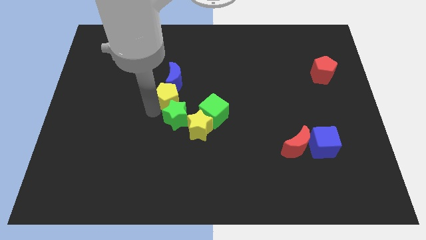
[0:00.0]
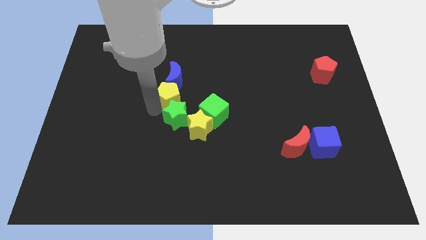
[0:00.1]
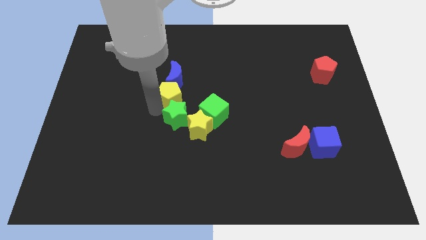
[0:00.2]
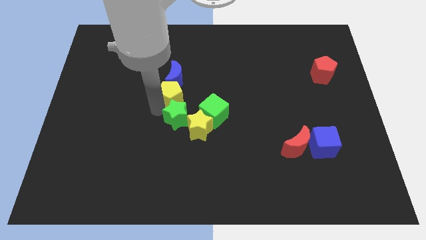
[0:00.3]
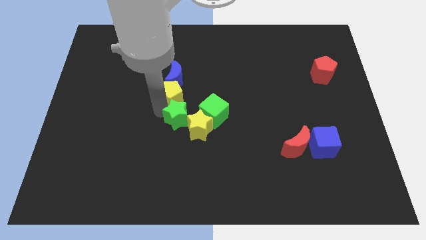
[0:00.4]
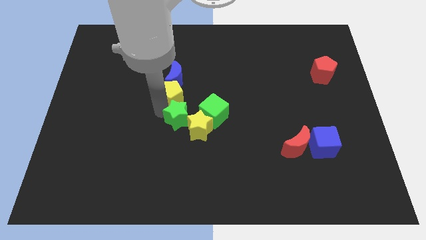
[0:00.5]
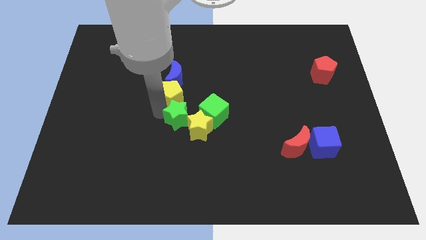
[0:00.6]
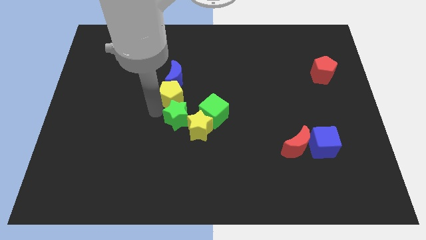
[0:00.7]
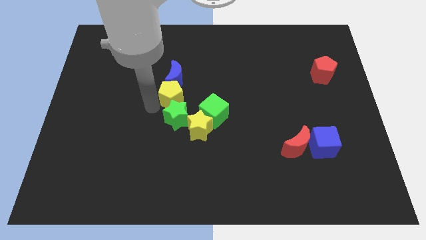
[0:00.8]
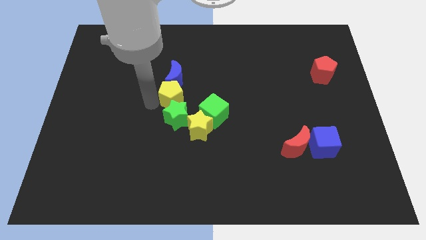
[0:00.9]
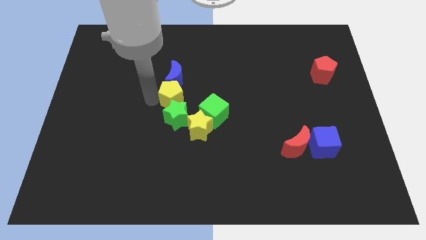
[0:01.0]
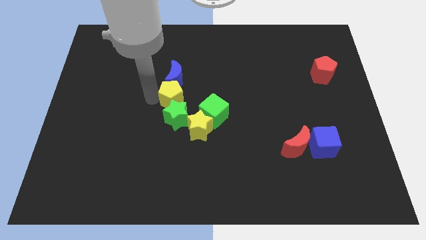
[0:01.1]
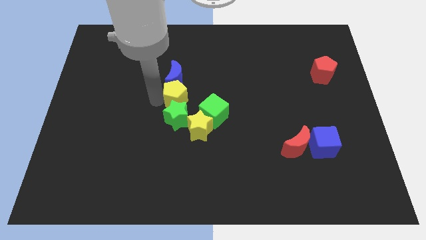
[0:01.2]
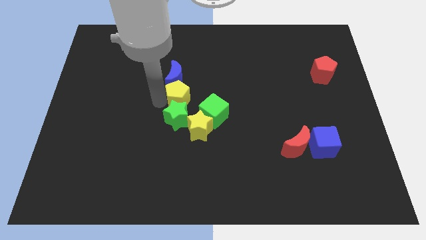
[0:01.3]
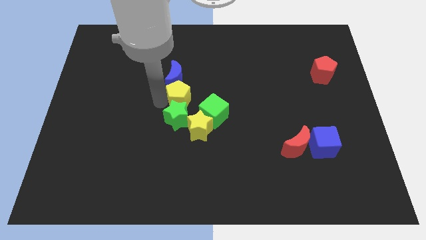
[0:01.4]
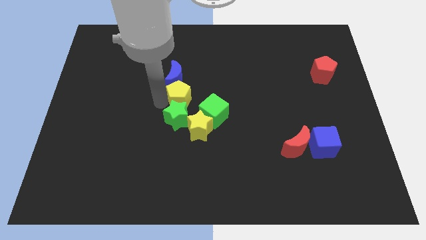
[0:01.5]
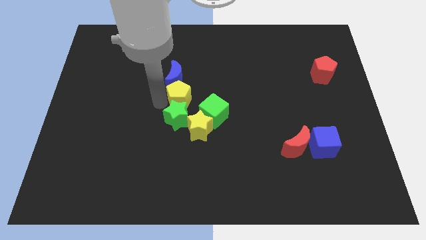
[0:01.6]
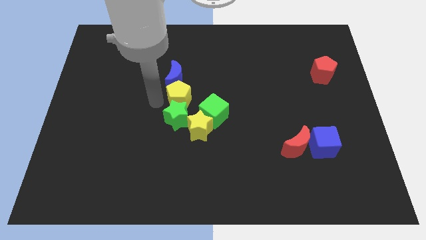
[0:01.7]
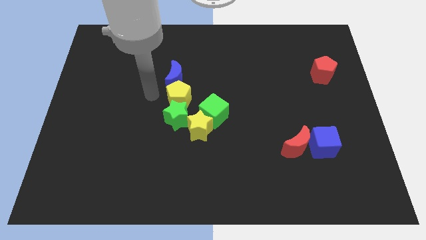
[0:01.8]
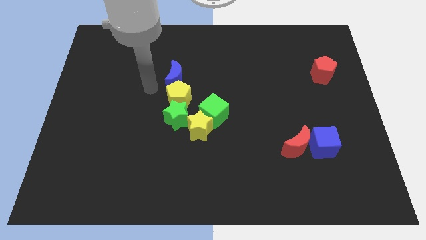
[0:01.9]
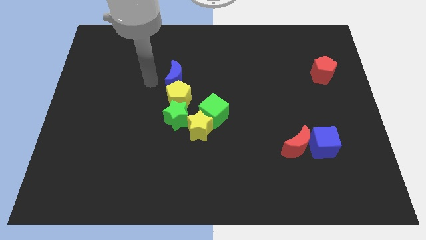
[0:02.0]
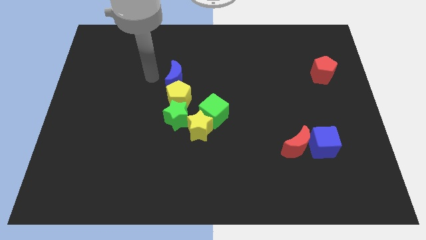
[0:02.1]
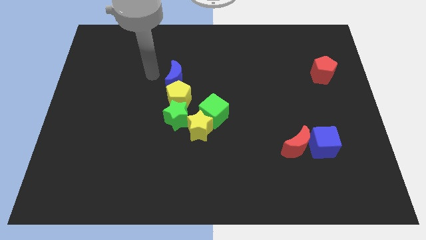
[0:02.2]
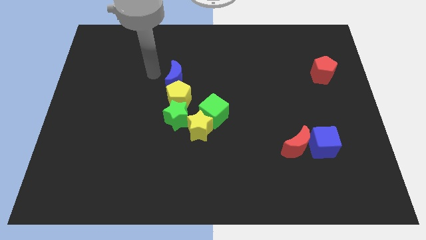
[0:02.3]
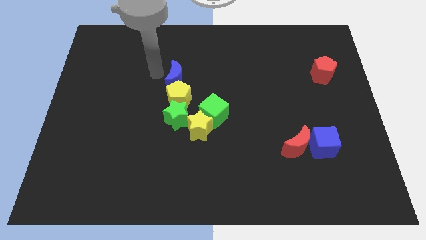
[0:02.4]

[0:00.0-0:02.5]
push the yellow pentagon in between the green star and blue moon

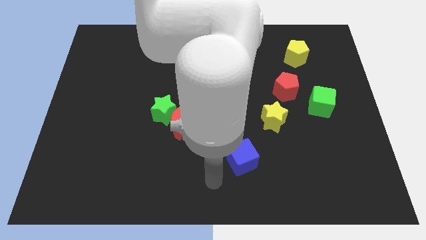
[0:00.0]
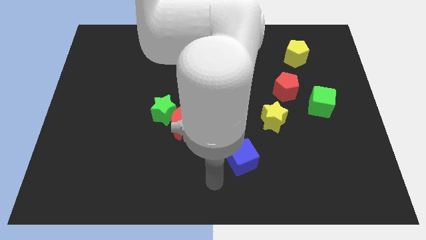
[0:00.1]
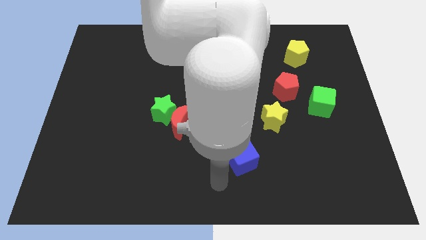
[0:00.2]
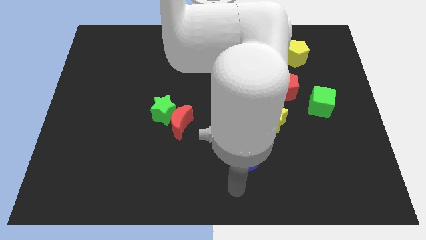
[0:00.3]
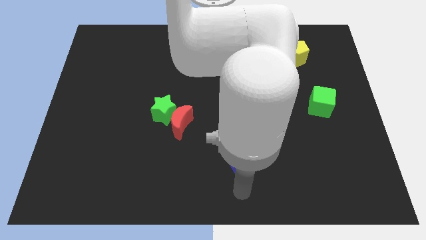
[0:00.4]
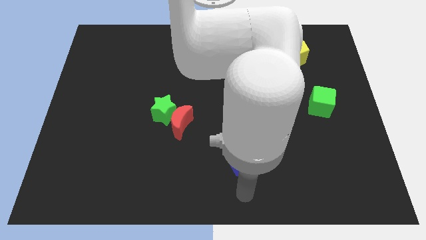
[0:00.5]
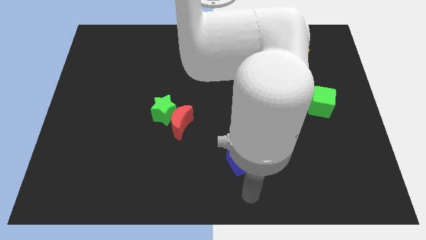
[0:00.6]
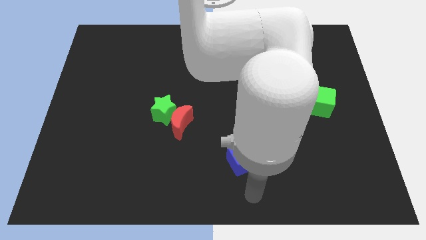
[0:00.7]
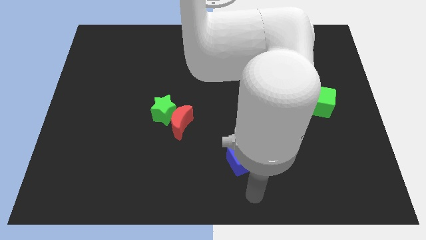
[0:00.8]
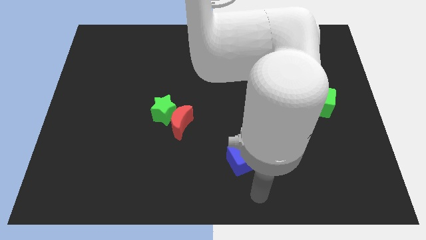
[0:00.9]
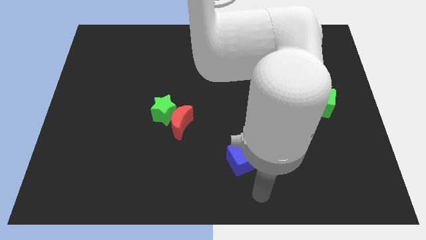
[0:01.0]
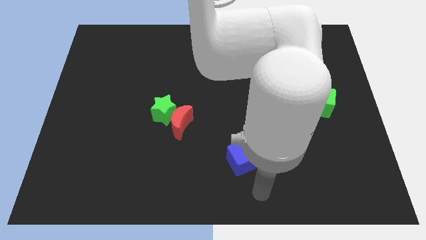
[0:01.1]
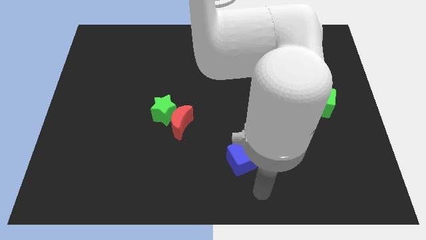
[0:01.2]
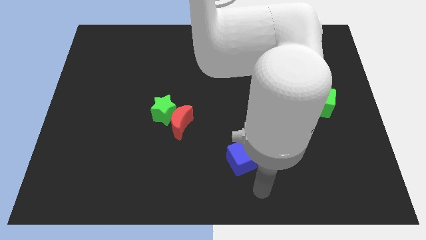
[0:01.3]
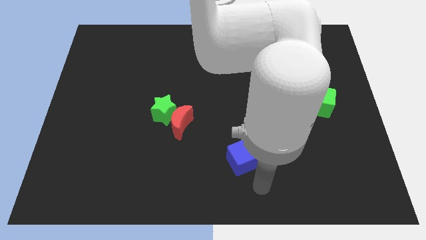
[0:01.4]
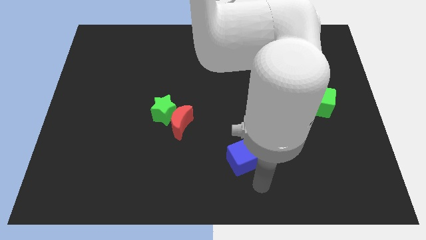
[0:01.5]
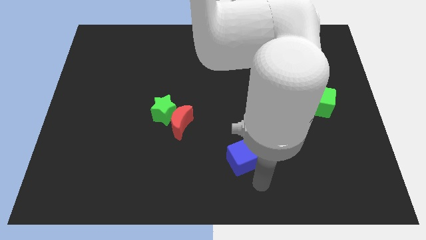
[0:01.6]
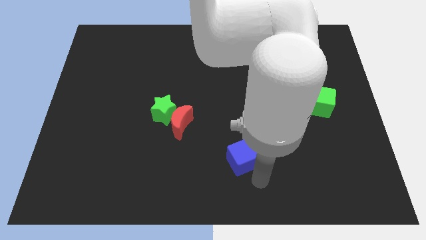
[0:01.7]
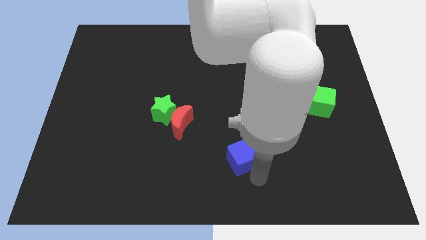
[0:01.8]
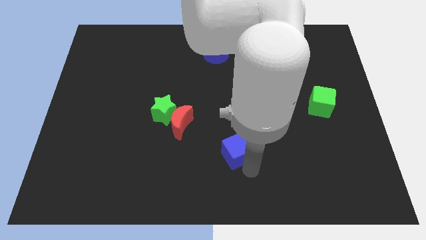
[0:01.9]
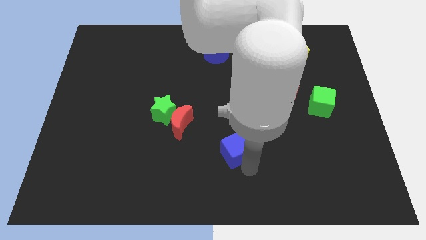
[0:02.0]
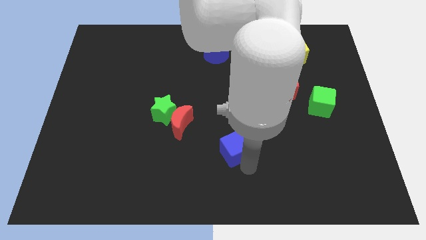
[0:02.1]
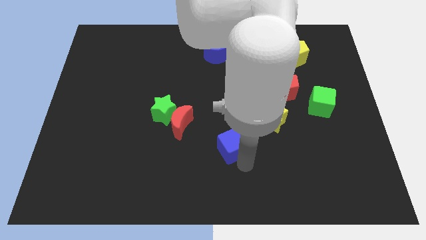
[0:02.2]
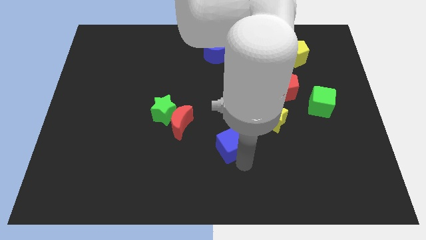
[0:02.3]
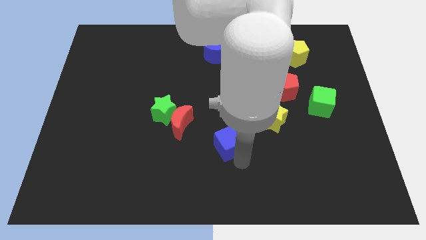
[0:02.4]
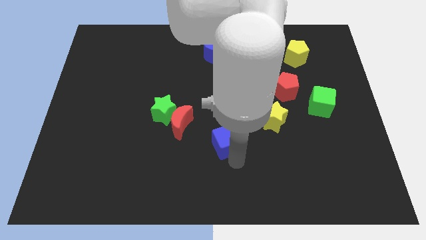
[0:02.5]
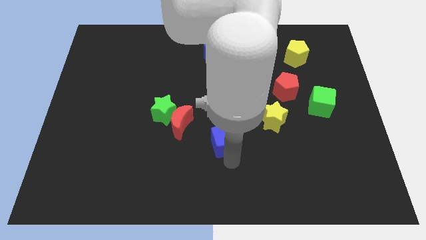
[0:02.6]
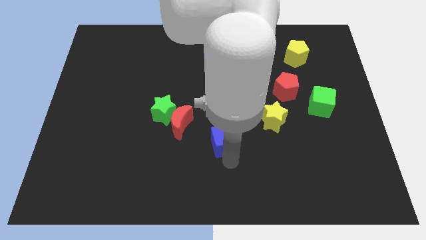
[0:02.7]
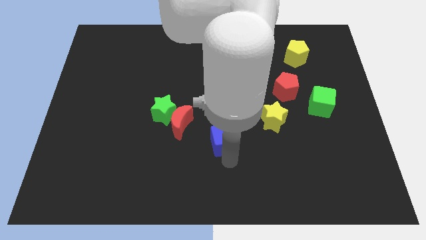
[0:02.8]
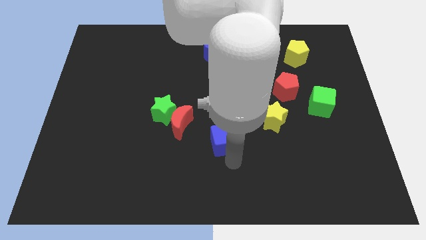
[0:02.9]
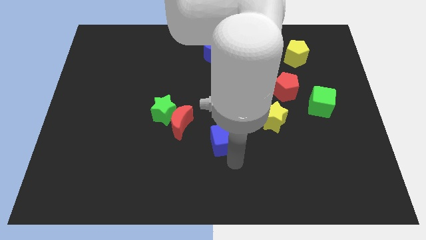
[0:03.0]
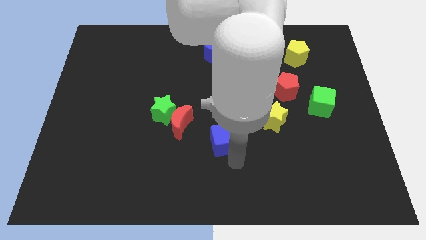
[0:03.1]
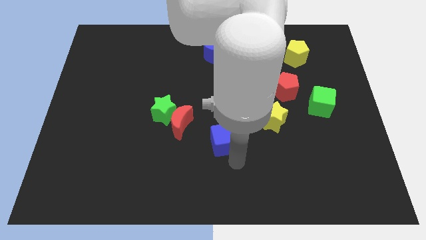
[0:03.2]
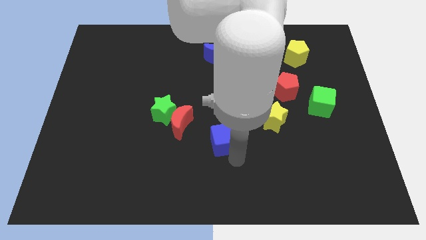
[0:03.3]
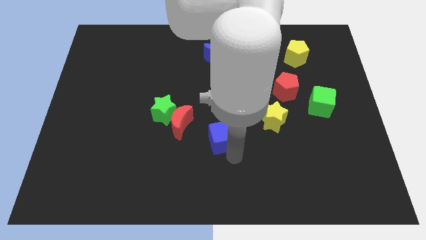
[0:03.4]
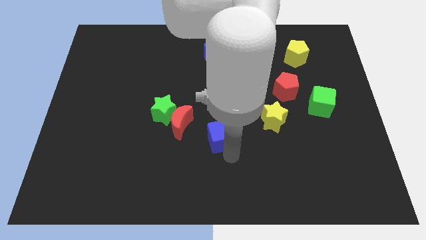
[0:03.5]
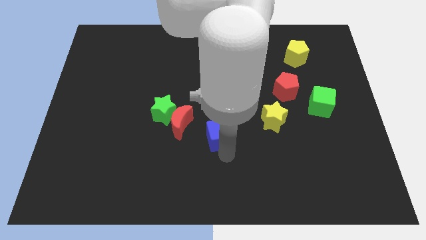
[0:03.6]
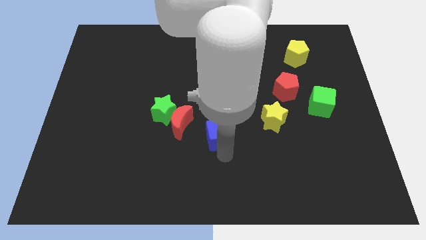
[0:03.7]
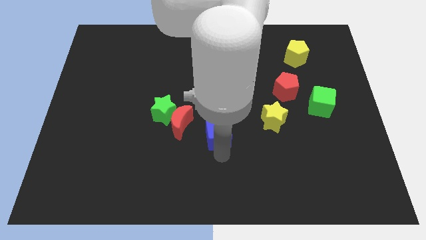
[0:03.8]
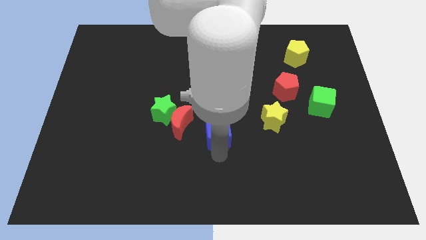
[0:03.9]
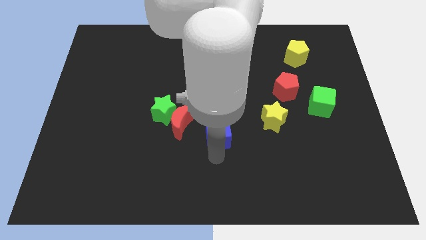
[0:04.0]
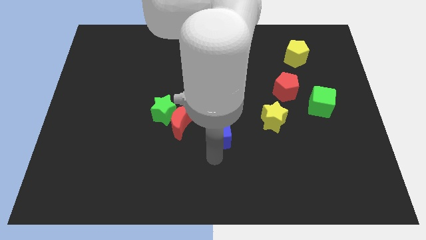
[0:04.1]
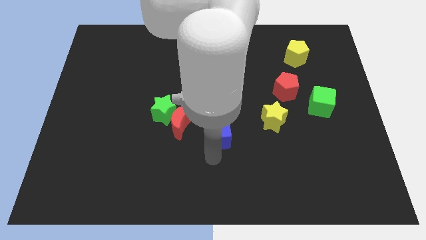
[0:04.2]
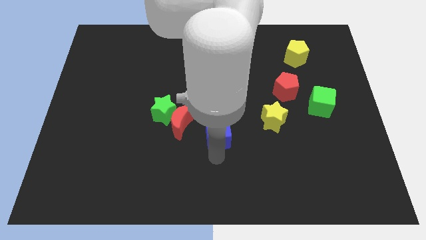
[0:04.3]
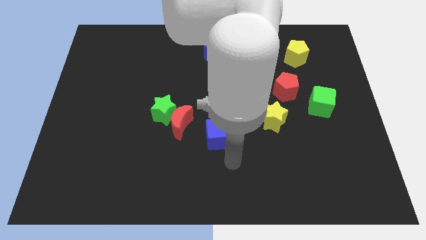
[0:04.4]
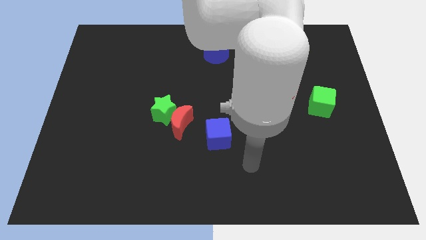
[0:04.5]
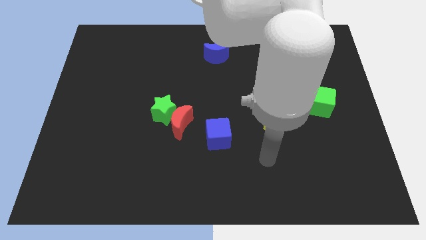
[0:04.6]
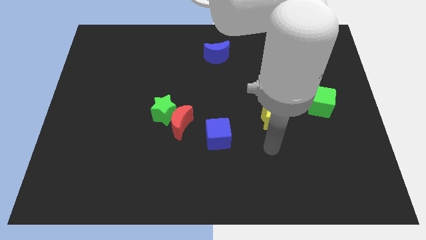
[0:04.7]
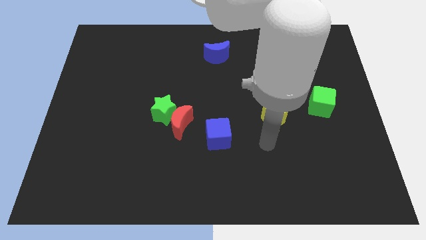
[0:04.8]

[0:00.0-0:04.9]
push the blue cube towards the center of the board

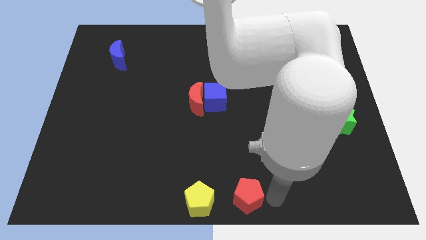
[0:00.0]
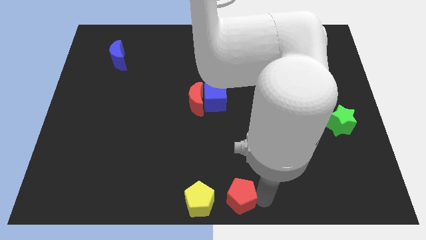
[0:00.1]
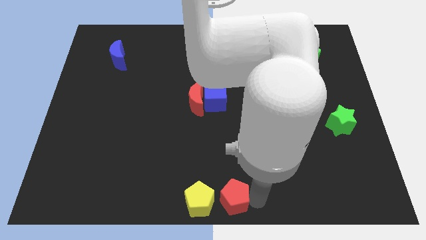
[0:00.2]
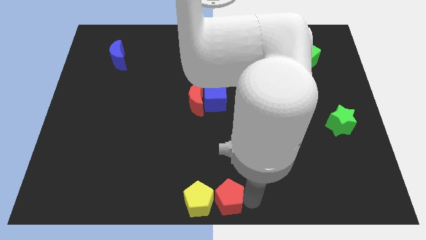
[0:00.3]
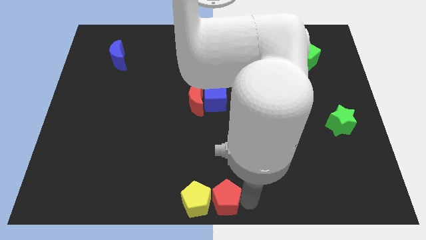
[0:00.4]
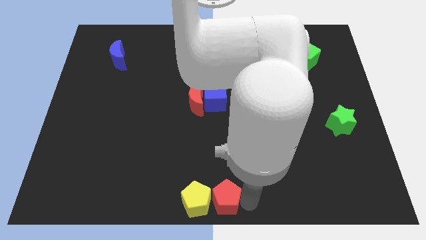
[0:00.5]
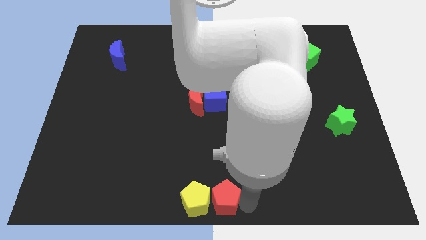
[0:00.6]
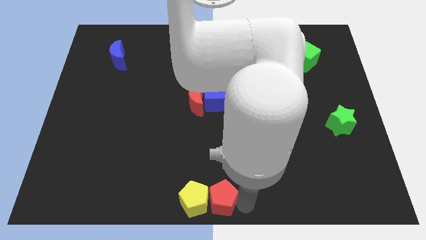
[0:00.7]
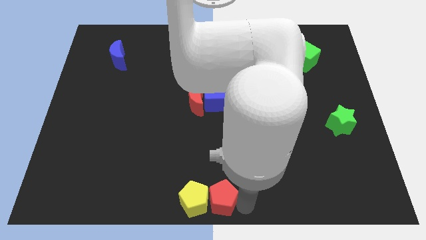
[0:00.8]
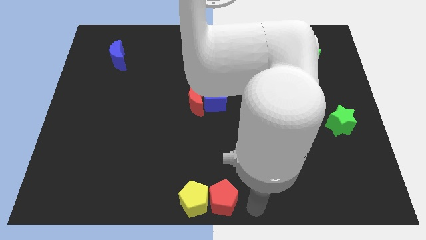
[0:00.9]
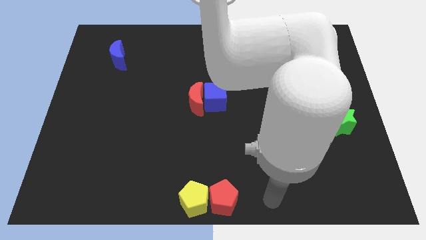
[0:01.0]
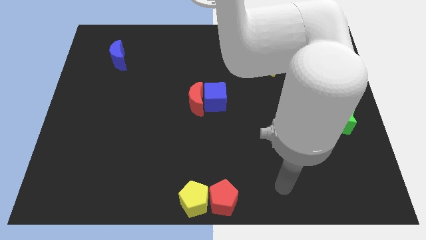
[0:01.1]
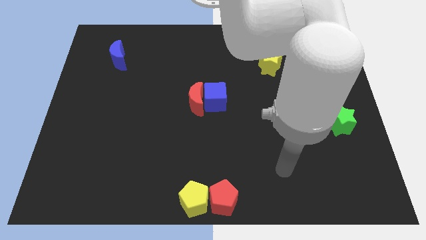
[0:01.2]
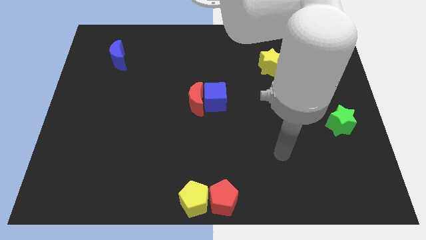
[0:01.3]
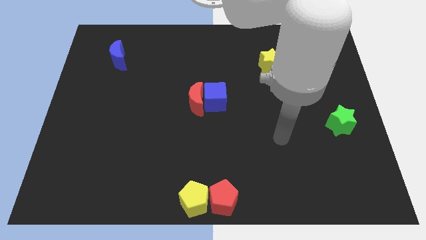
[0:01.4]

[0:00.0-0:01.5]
place the red pentagon next to the yellow pentagon
